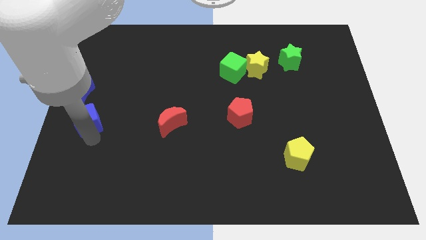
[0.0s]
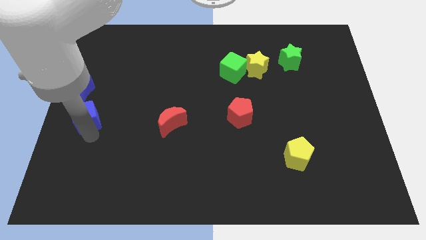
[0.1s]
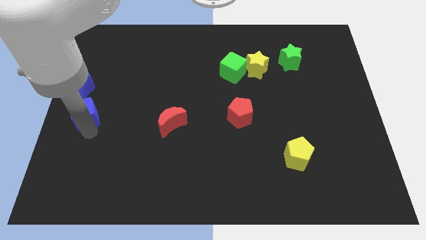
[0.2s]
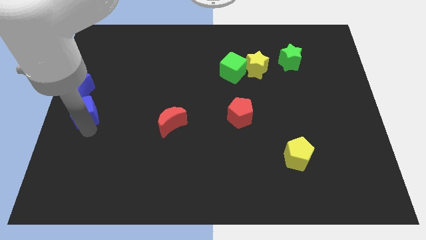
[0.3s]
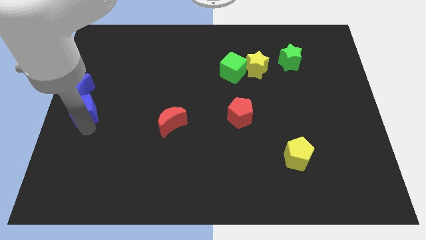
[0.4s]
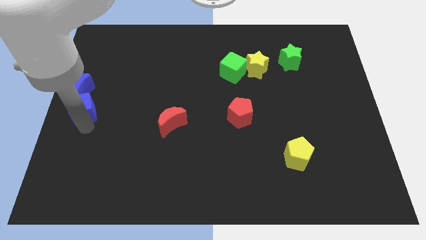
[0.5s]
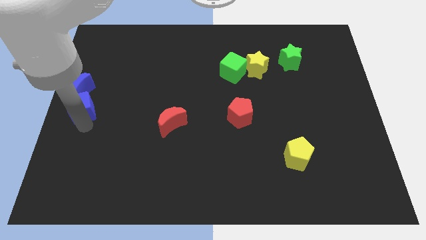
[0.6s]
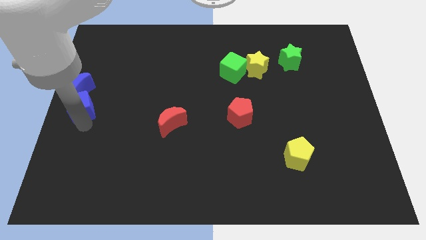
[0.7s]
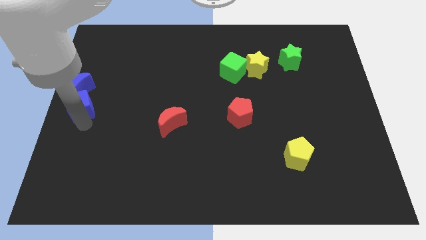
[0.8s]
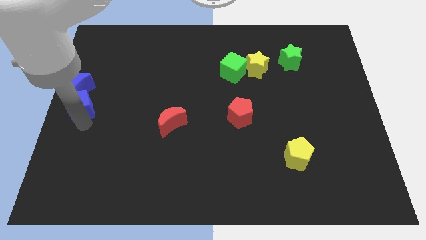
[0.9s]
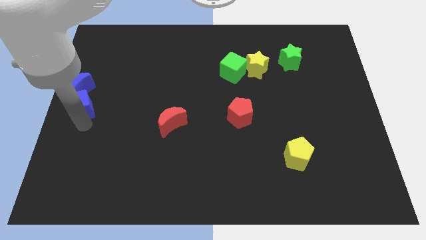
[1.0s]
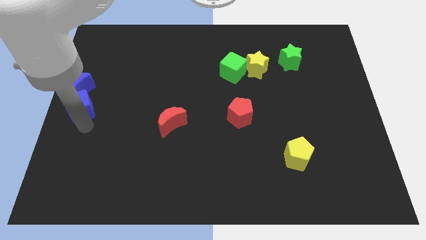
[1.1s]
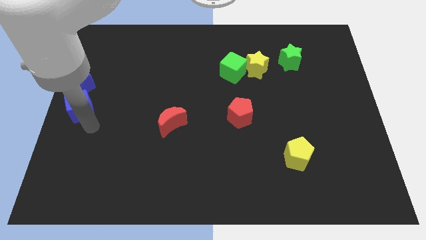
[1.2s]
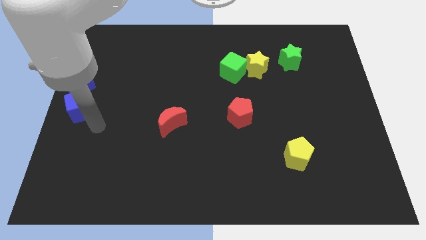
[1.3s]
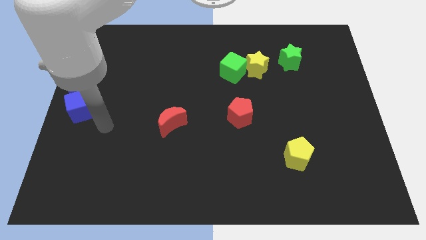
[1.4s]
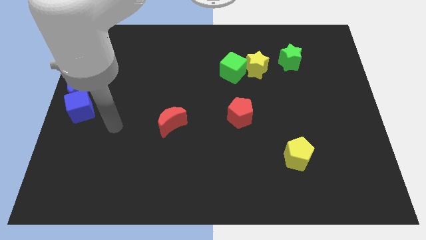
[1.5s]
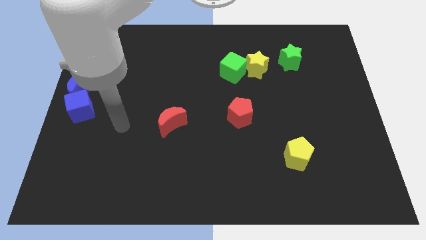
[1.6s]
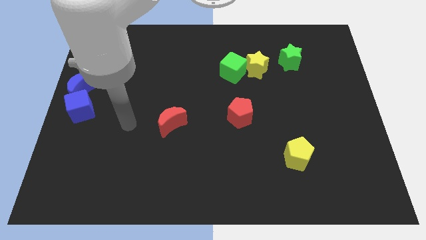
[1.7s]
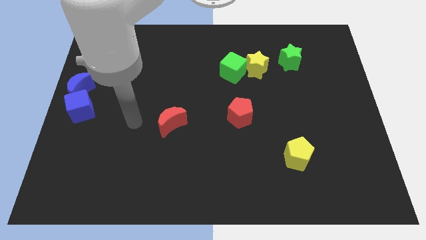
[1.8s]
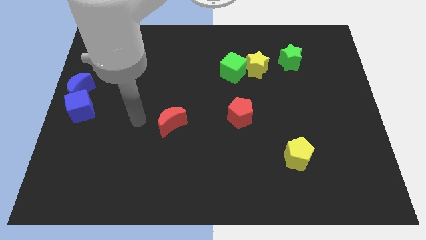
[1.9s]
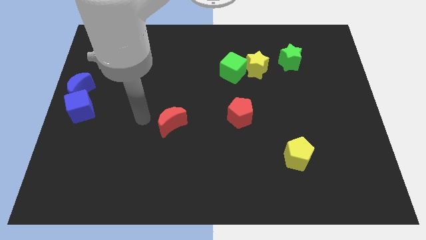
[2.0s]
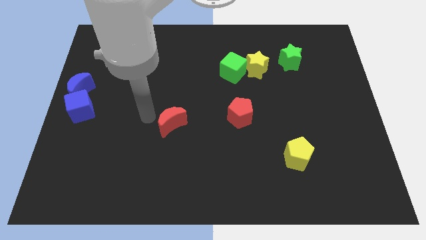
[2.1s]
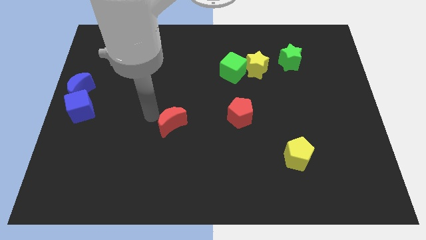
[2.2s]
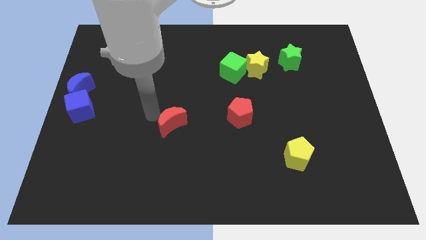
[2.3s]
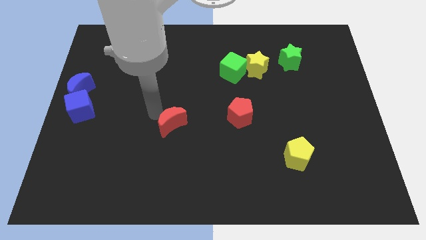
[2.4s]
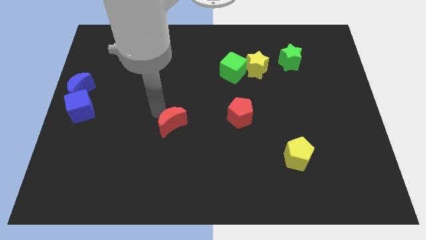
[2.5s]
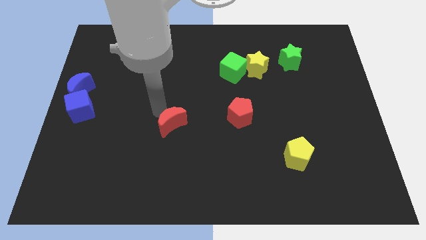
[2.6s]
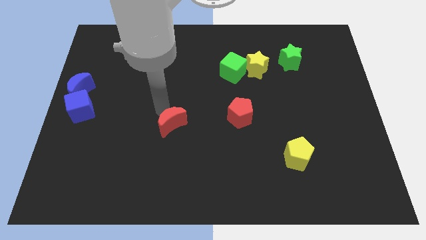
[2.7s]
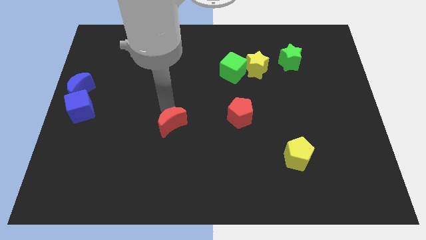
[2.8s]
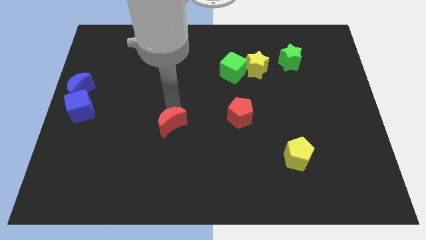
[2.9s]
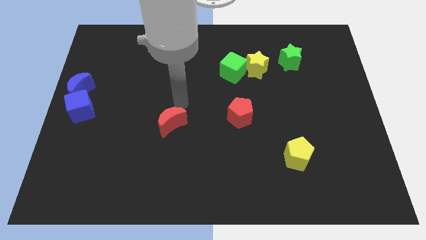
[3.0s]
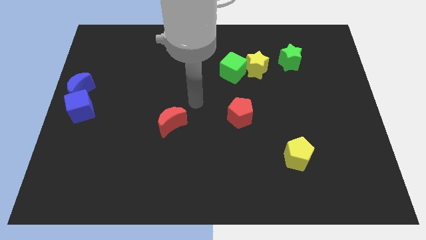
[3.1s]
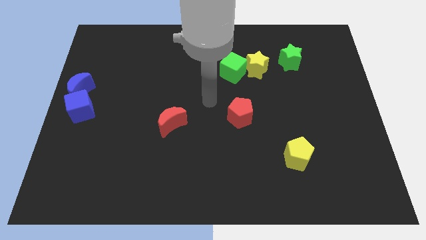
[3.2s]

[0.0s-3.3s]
push the blue cube to the bottom of the blue crescent

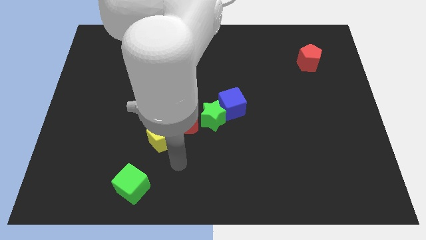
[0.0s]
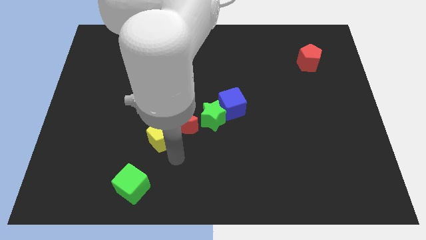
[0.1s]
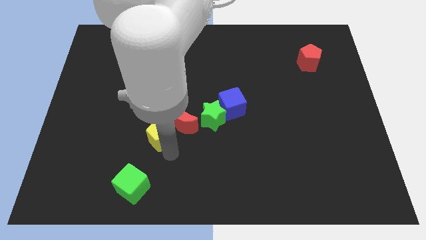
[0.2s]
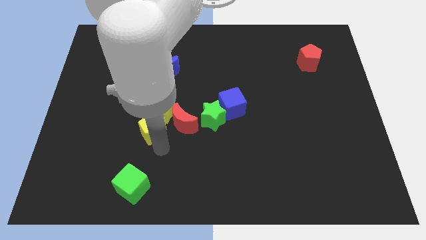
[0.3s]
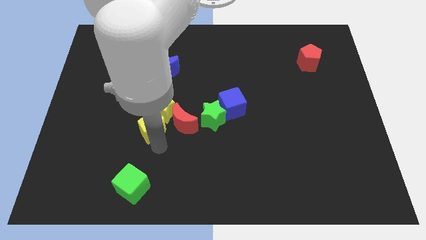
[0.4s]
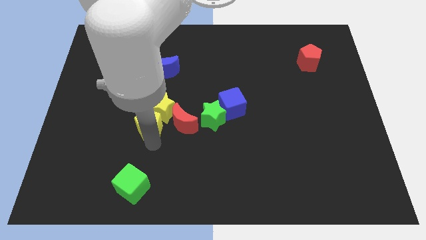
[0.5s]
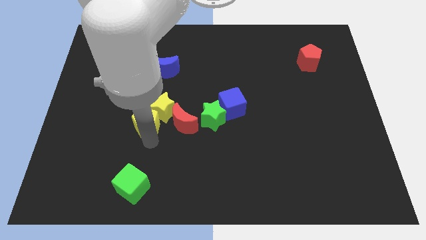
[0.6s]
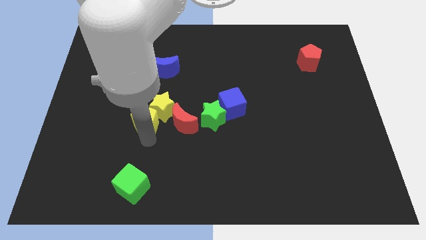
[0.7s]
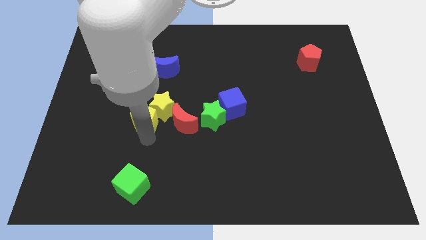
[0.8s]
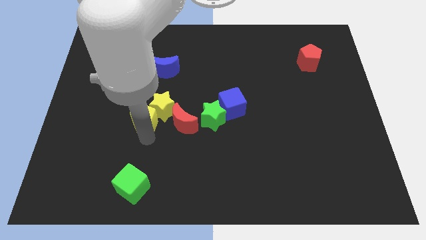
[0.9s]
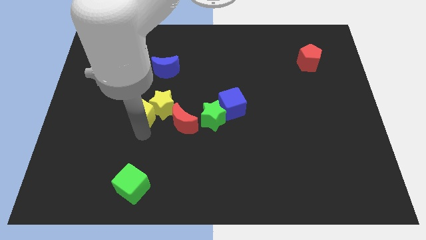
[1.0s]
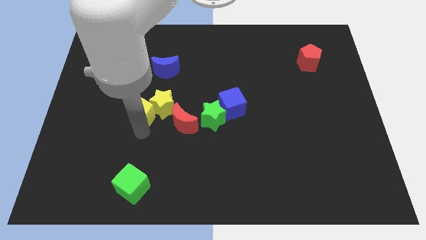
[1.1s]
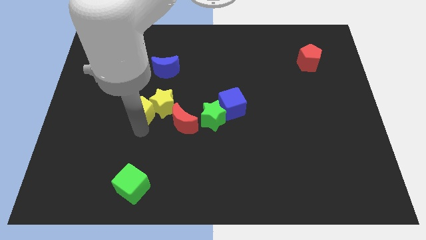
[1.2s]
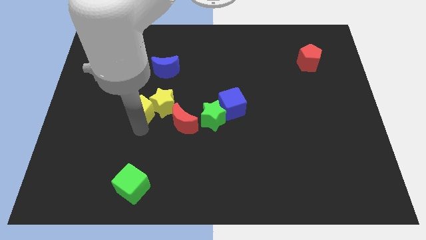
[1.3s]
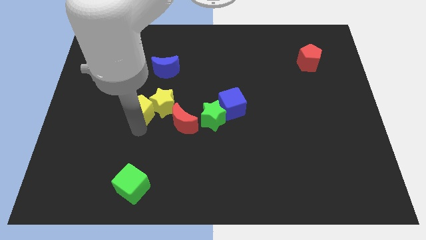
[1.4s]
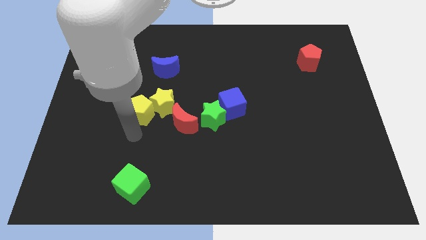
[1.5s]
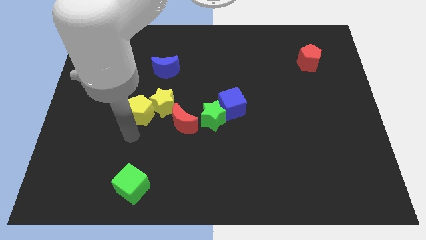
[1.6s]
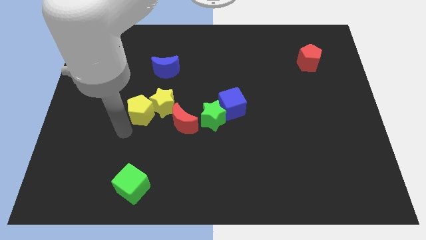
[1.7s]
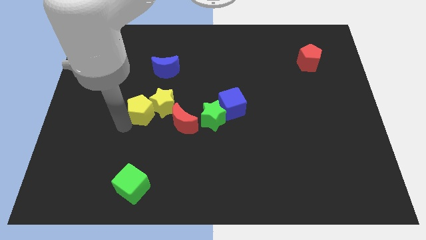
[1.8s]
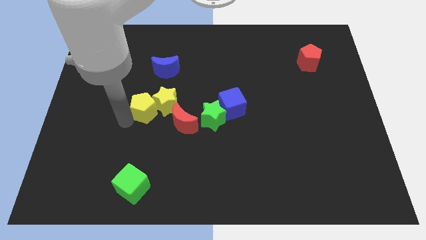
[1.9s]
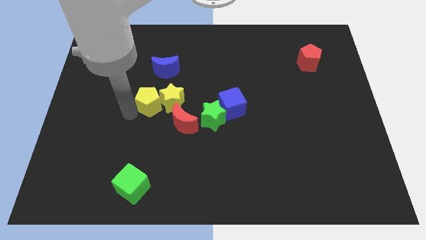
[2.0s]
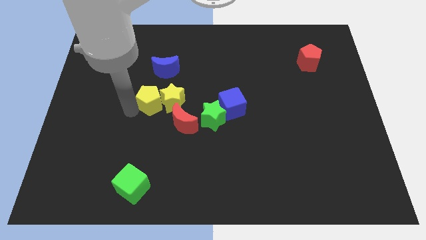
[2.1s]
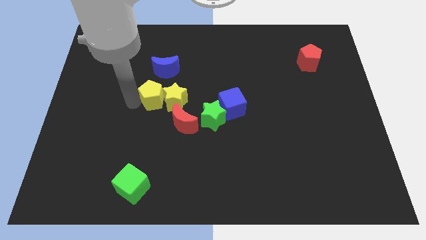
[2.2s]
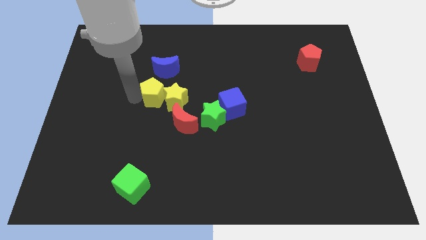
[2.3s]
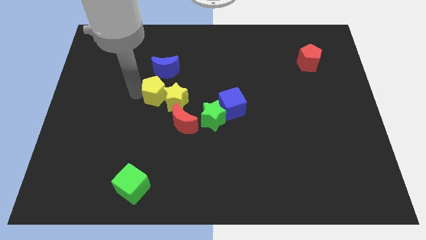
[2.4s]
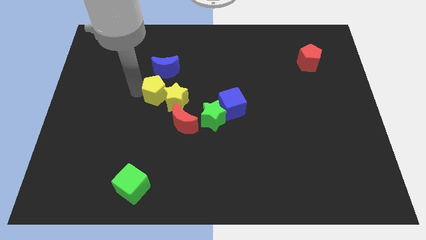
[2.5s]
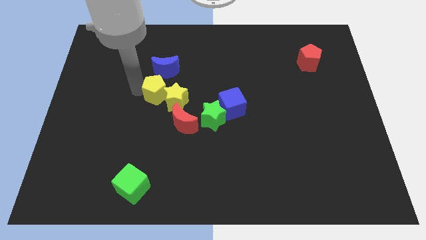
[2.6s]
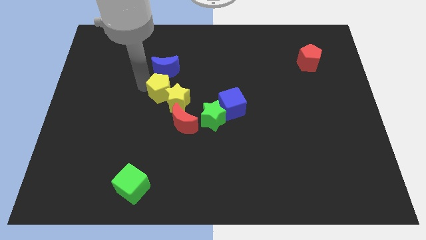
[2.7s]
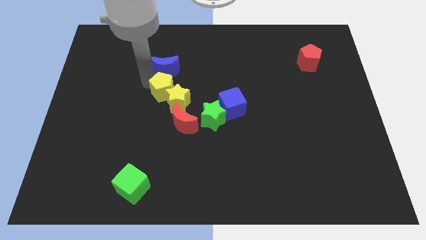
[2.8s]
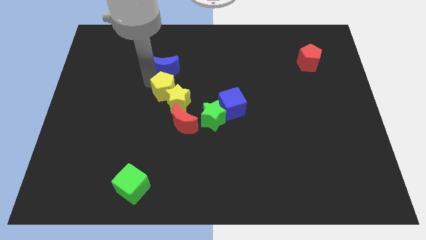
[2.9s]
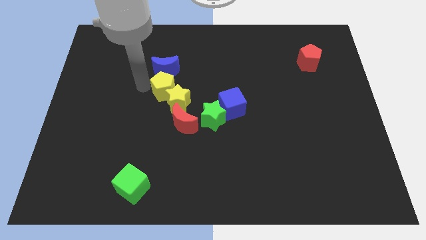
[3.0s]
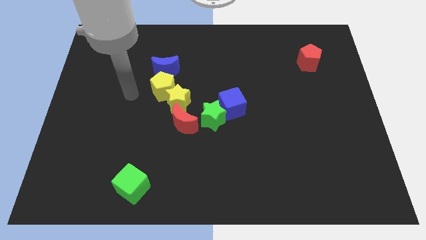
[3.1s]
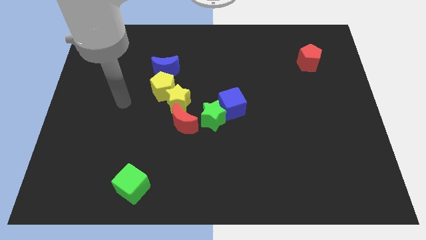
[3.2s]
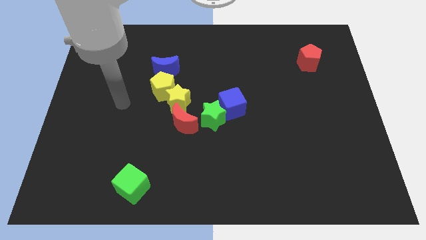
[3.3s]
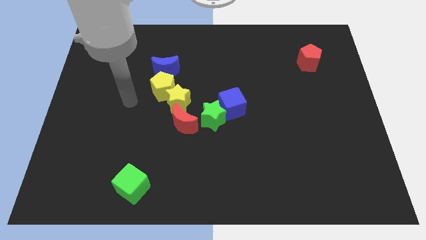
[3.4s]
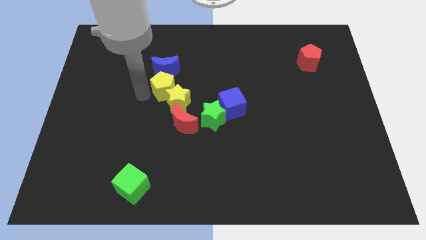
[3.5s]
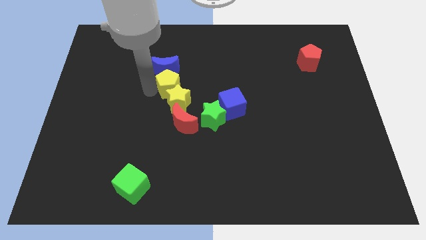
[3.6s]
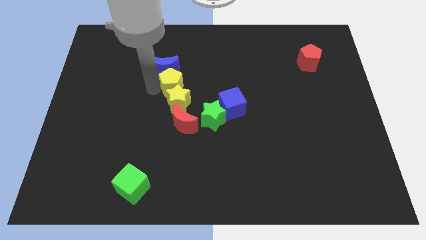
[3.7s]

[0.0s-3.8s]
place yellow pentagon to the bottom of blue moon

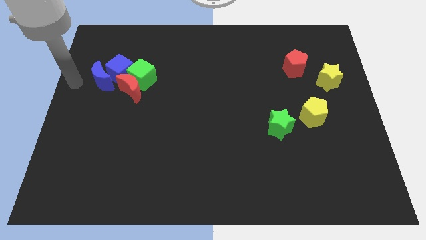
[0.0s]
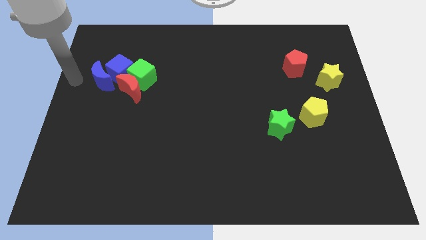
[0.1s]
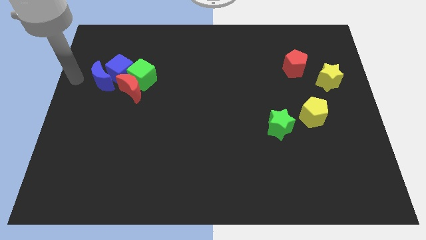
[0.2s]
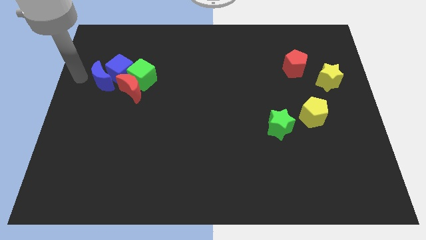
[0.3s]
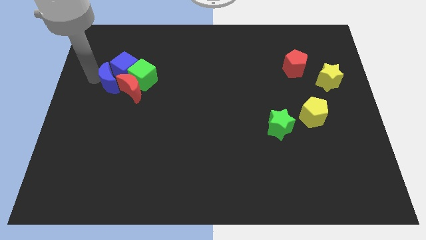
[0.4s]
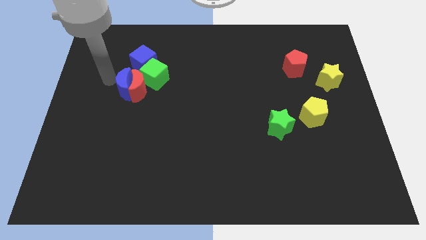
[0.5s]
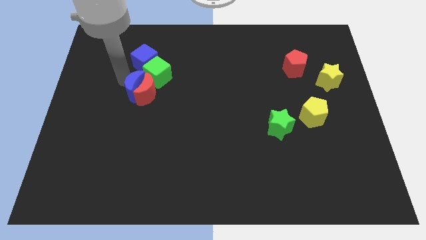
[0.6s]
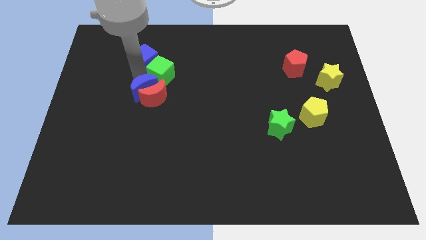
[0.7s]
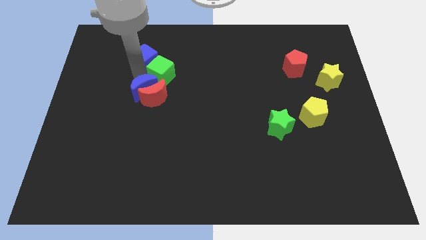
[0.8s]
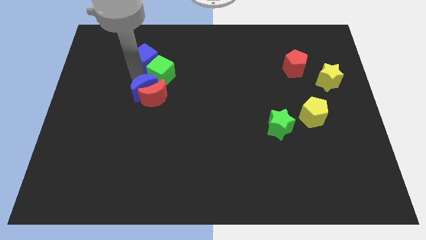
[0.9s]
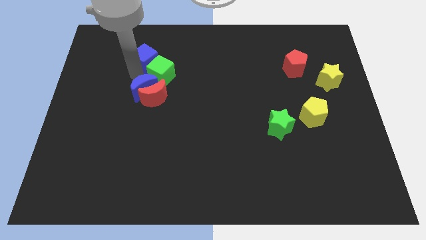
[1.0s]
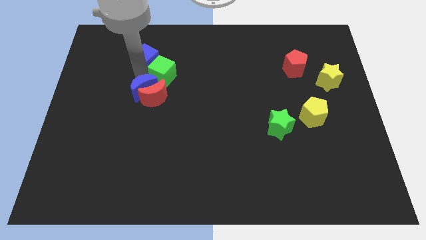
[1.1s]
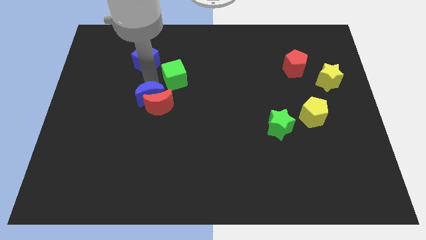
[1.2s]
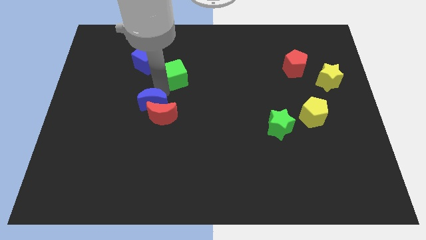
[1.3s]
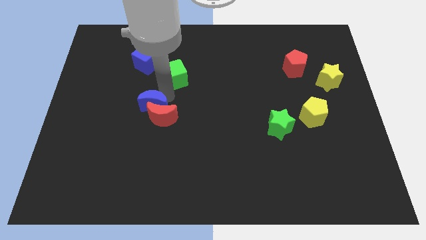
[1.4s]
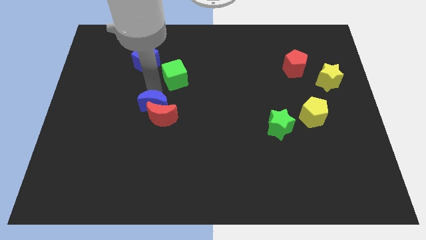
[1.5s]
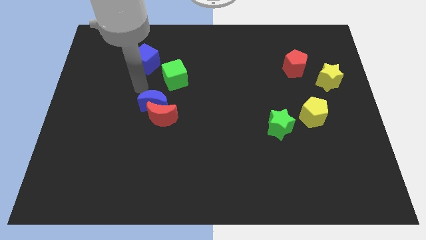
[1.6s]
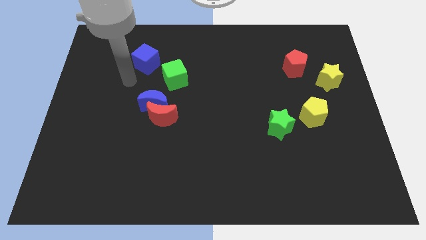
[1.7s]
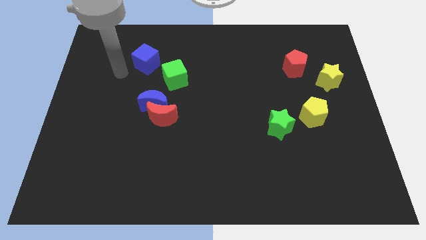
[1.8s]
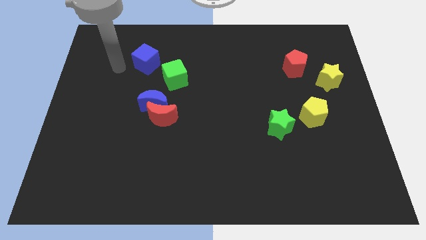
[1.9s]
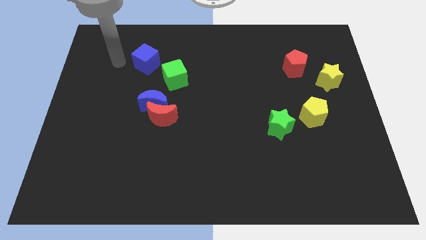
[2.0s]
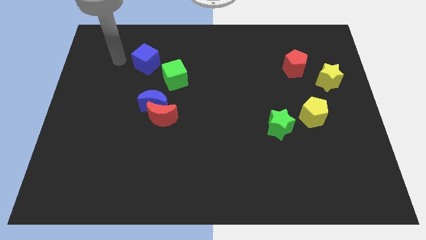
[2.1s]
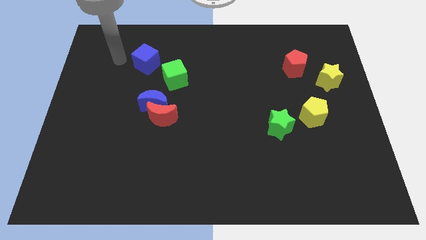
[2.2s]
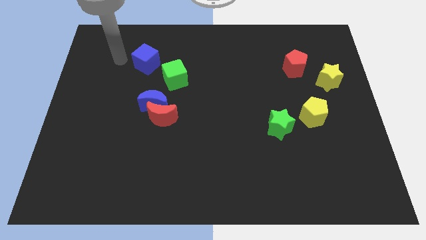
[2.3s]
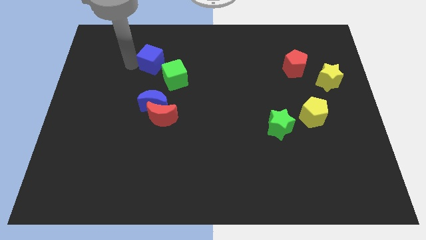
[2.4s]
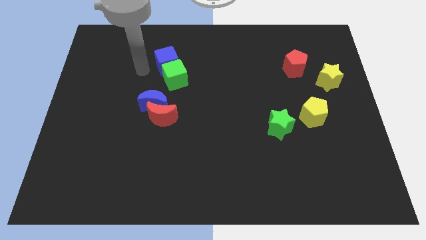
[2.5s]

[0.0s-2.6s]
move the green cube with the blue cube
